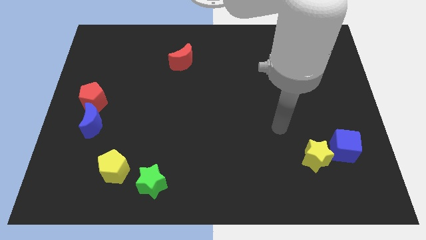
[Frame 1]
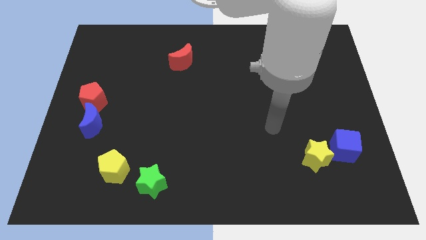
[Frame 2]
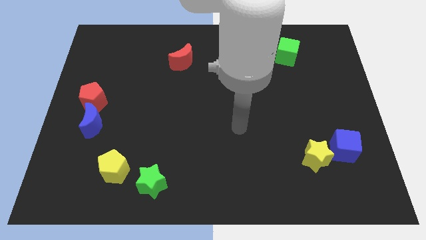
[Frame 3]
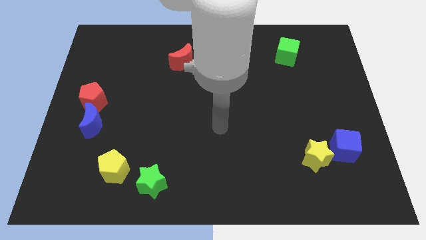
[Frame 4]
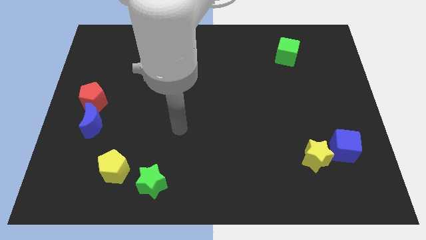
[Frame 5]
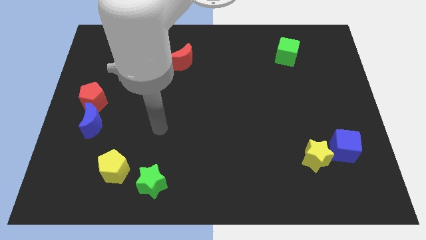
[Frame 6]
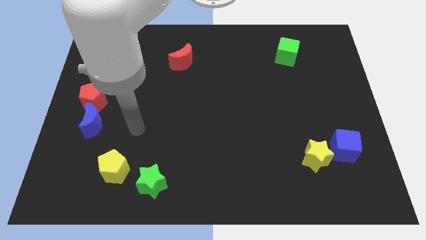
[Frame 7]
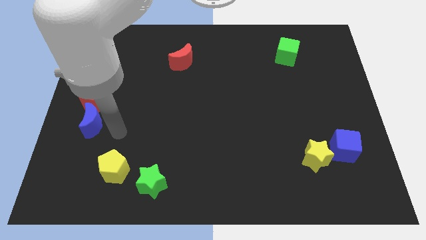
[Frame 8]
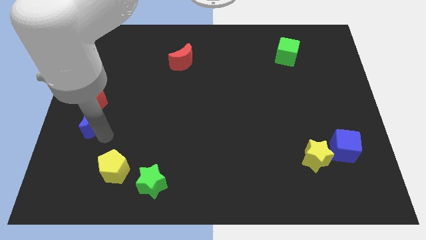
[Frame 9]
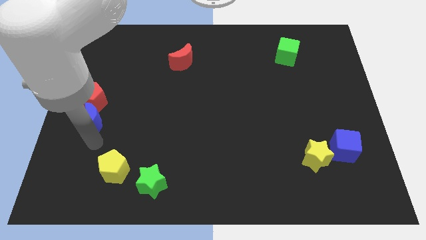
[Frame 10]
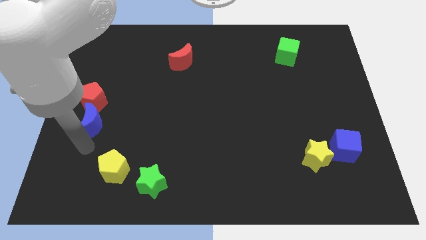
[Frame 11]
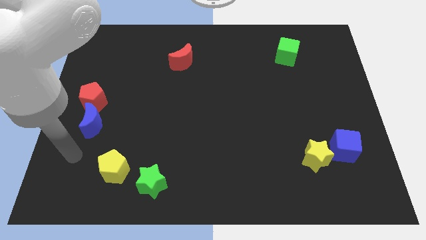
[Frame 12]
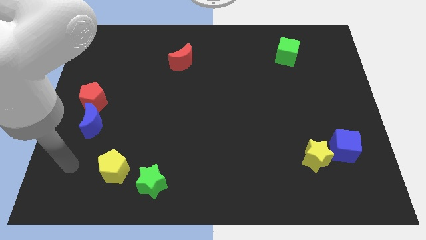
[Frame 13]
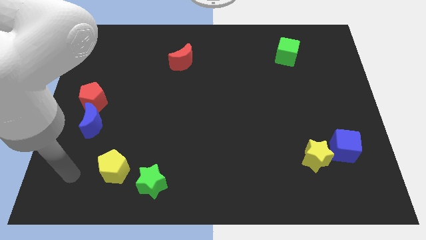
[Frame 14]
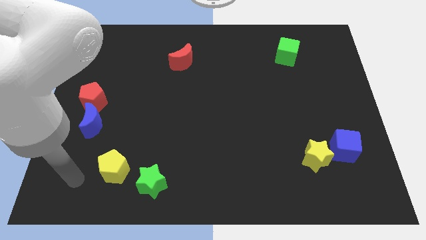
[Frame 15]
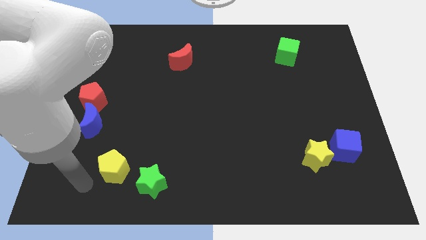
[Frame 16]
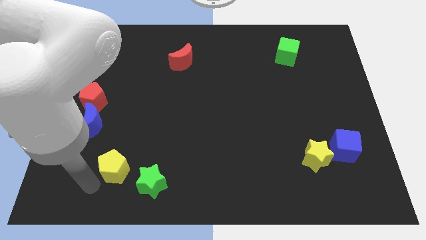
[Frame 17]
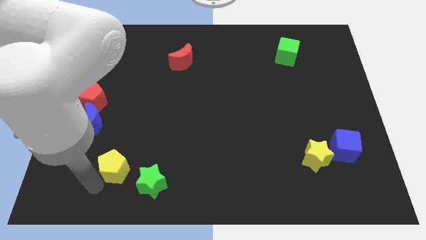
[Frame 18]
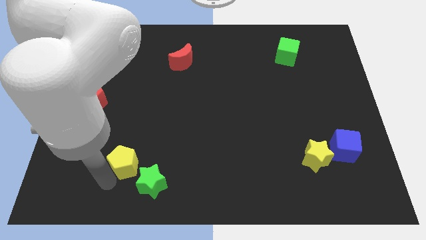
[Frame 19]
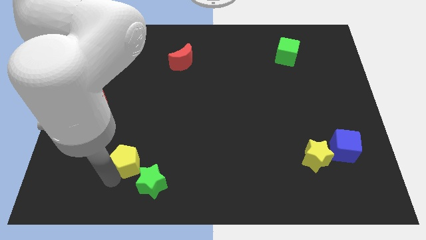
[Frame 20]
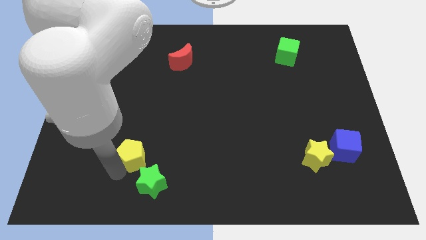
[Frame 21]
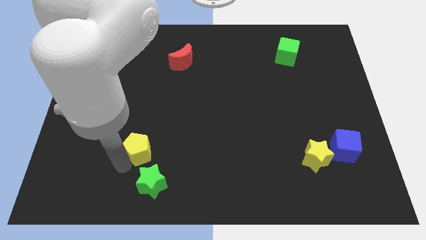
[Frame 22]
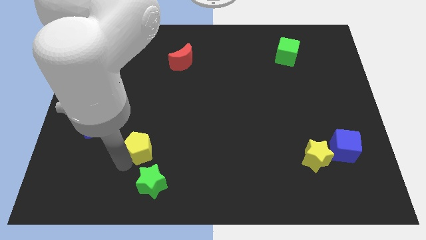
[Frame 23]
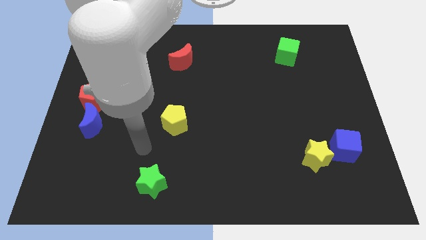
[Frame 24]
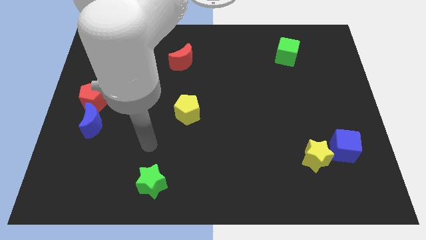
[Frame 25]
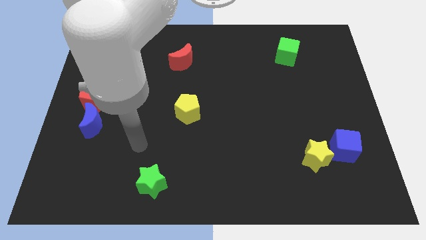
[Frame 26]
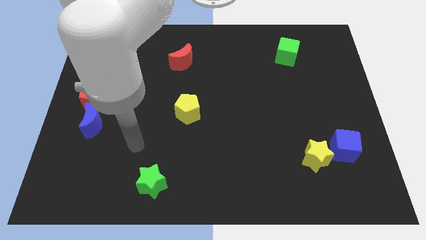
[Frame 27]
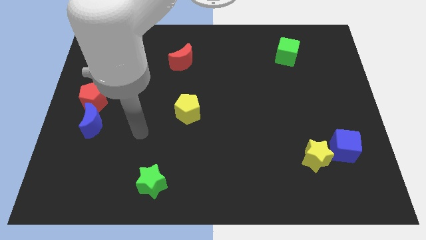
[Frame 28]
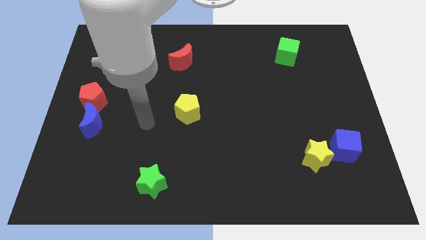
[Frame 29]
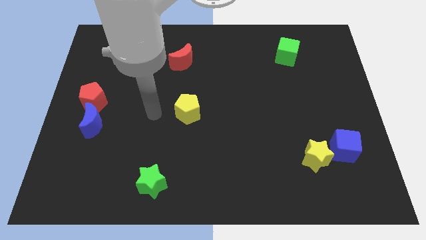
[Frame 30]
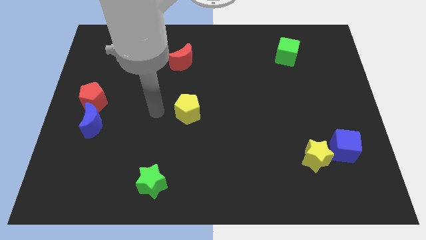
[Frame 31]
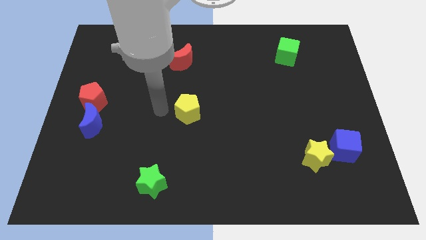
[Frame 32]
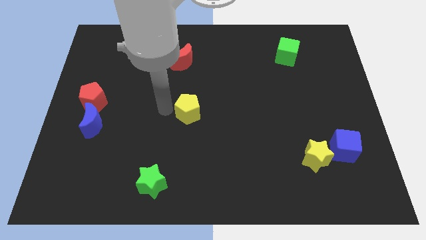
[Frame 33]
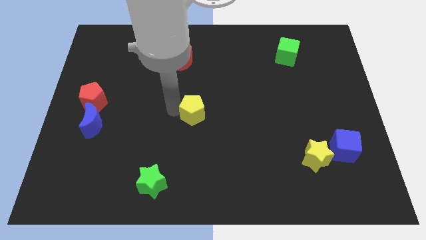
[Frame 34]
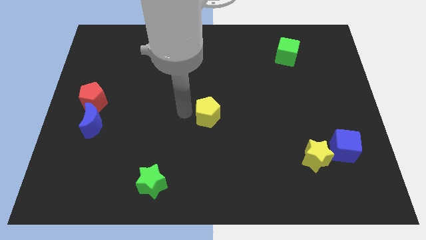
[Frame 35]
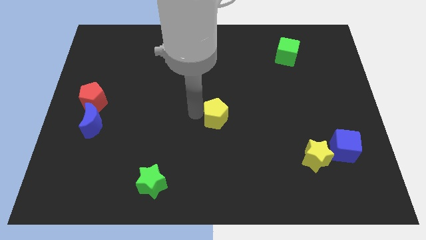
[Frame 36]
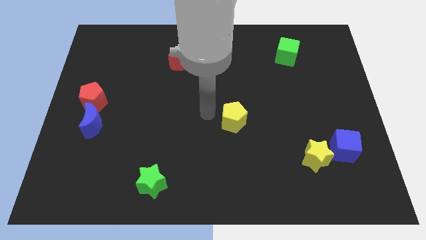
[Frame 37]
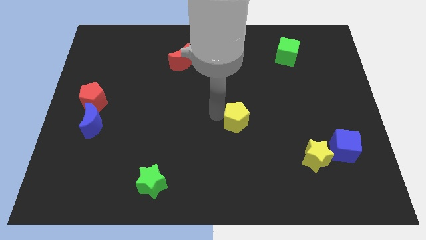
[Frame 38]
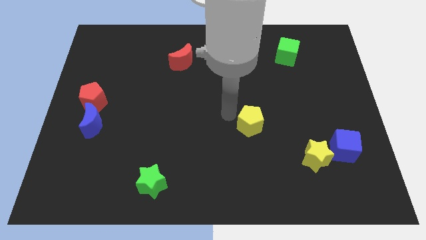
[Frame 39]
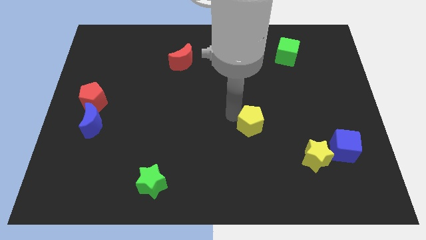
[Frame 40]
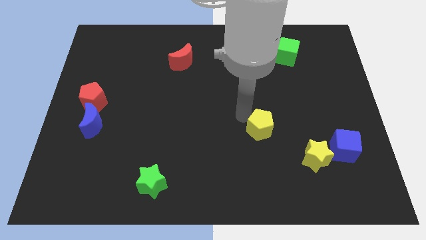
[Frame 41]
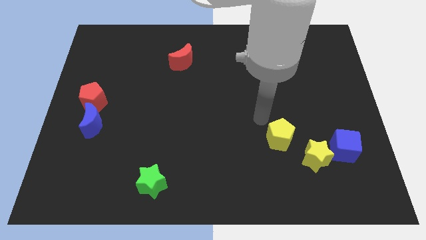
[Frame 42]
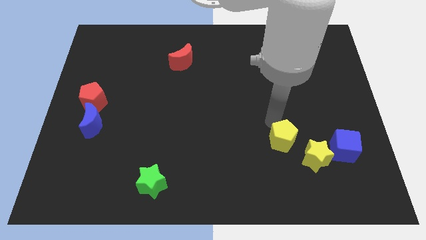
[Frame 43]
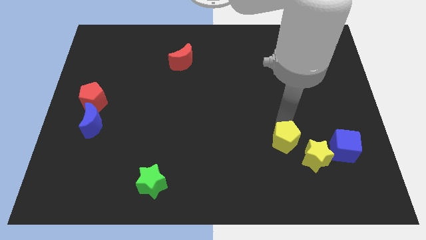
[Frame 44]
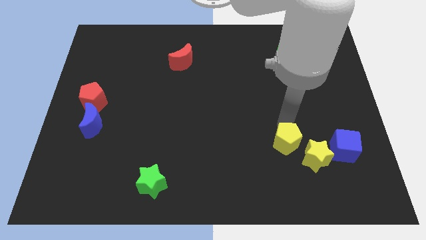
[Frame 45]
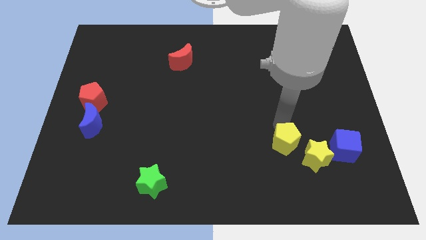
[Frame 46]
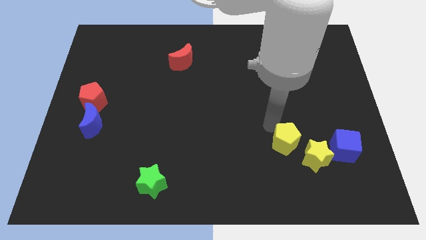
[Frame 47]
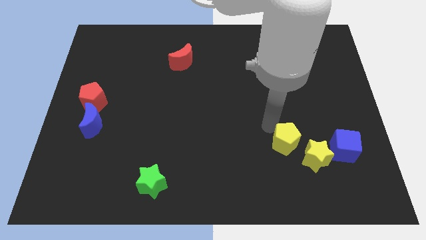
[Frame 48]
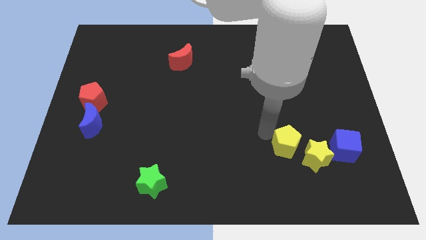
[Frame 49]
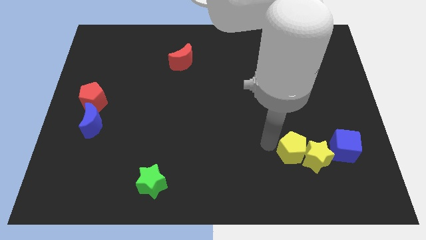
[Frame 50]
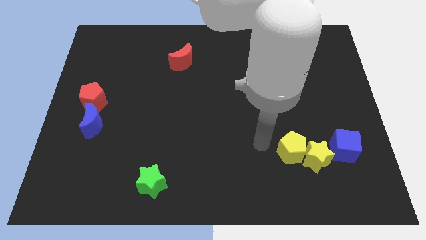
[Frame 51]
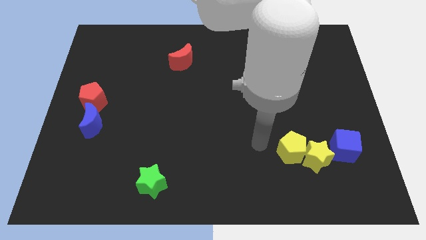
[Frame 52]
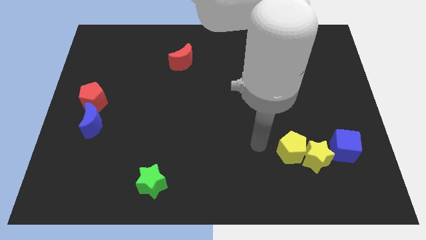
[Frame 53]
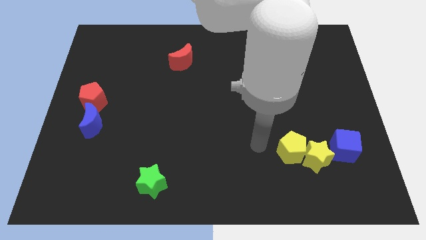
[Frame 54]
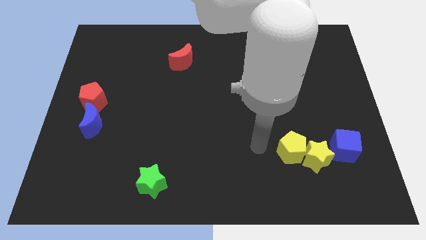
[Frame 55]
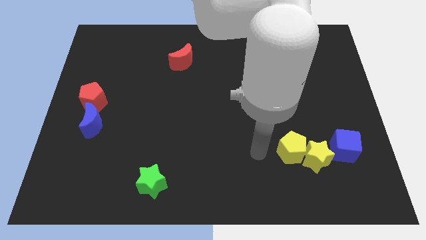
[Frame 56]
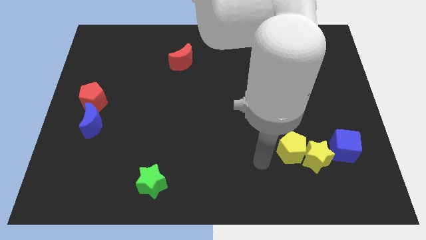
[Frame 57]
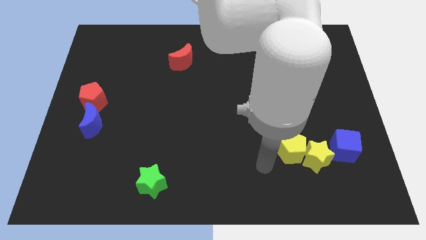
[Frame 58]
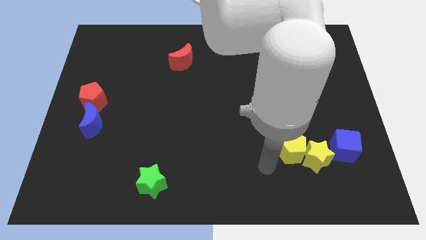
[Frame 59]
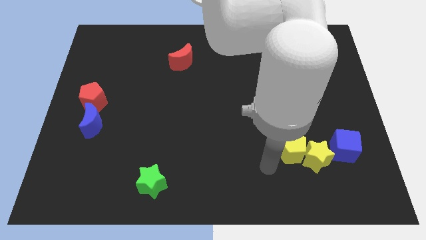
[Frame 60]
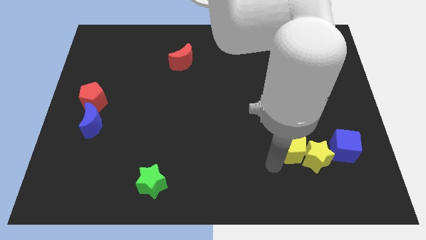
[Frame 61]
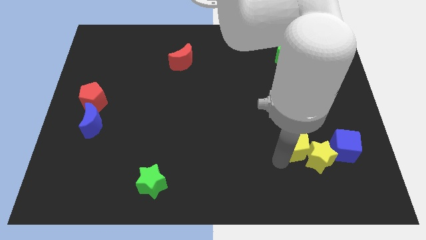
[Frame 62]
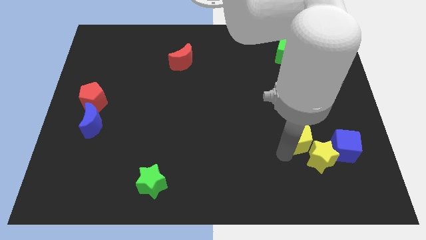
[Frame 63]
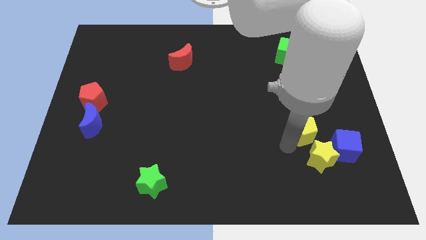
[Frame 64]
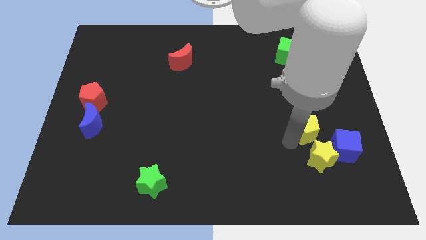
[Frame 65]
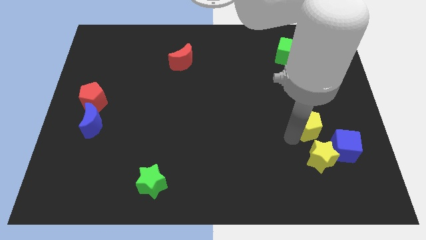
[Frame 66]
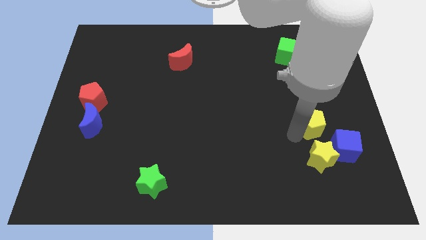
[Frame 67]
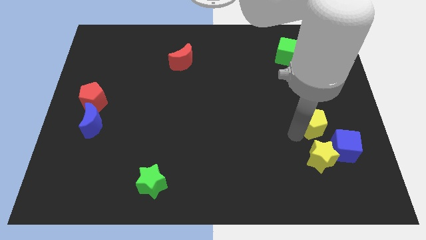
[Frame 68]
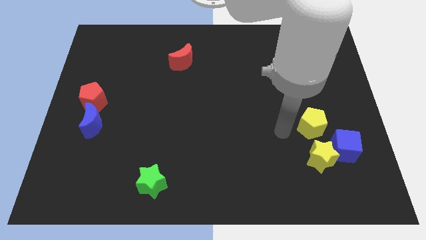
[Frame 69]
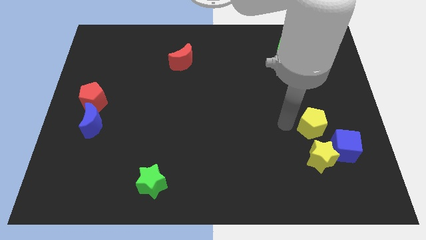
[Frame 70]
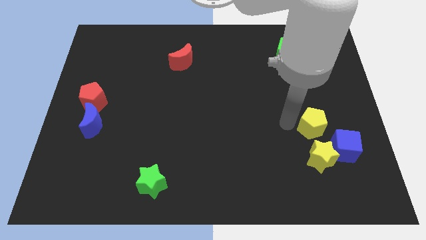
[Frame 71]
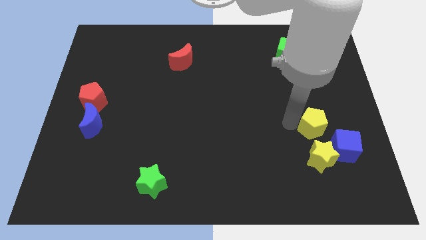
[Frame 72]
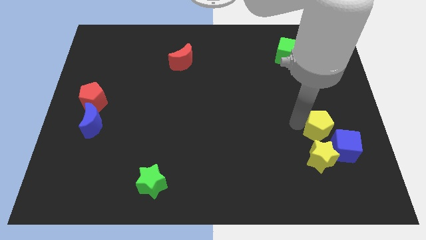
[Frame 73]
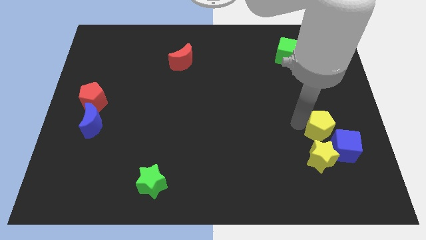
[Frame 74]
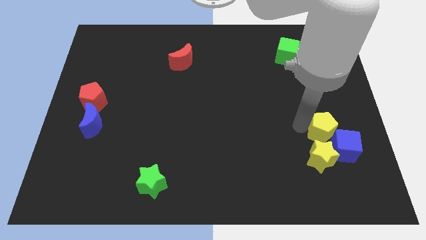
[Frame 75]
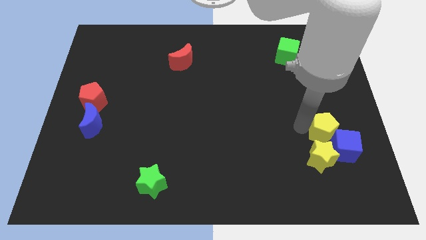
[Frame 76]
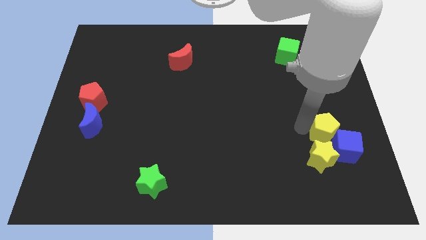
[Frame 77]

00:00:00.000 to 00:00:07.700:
push the yellow pentagon next to the blue cube

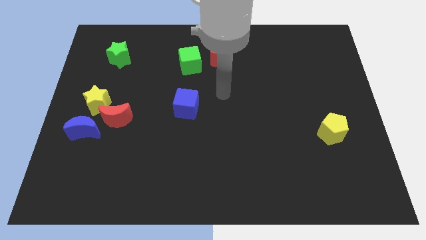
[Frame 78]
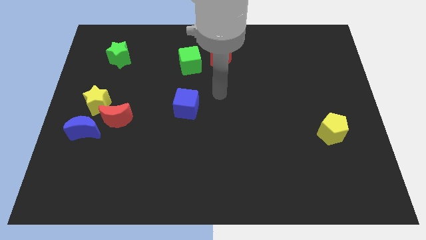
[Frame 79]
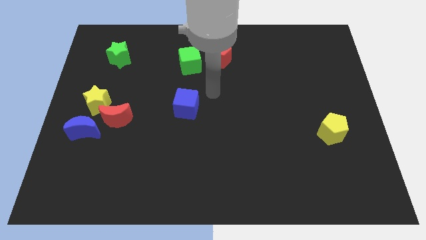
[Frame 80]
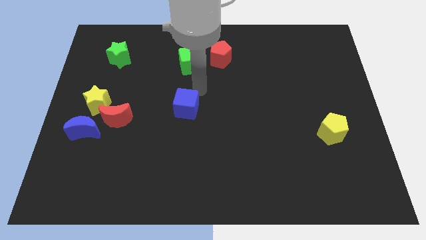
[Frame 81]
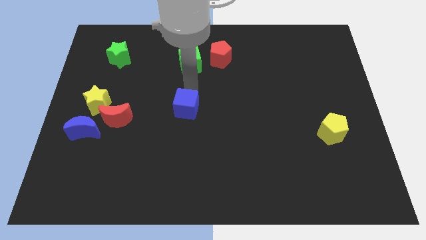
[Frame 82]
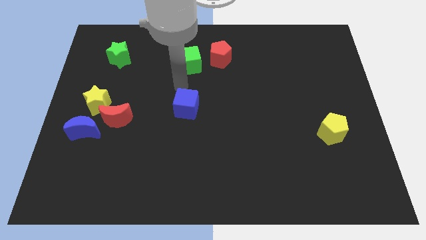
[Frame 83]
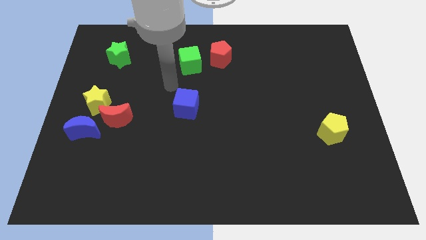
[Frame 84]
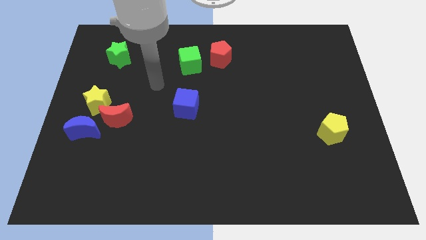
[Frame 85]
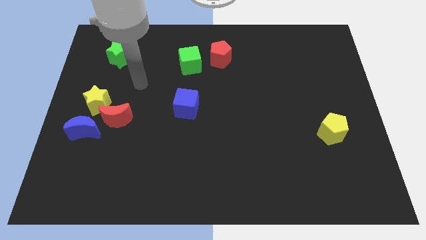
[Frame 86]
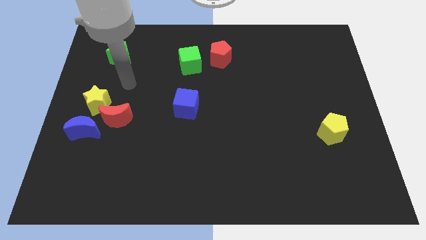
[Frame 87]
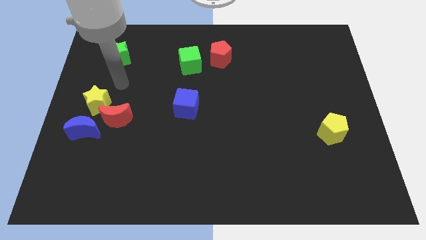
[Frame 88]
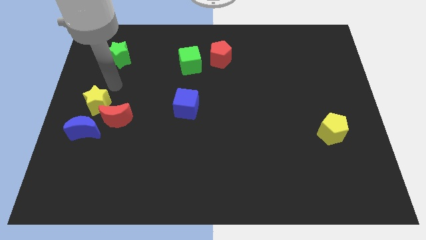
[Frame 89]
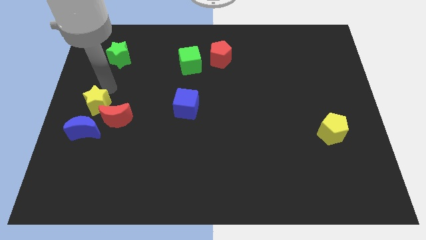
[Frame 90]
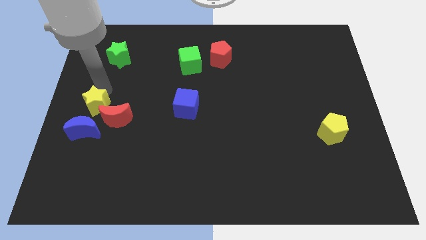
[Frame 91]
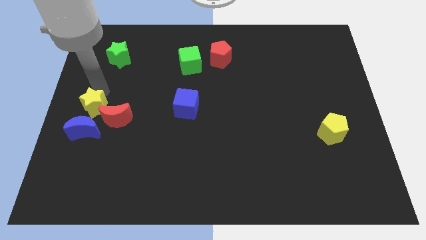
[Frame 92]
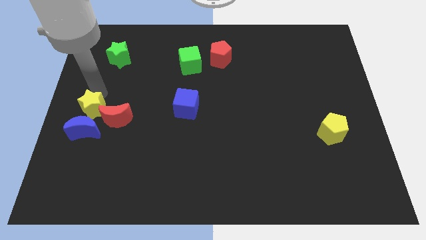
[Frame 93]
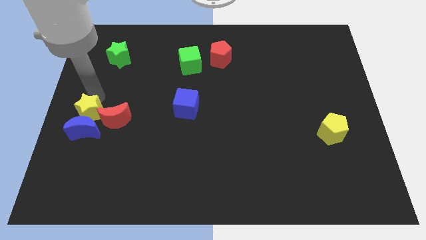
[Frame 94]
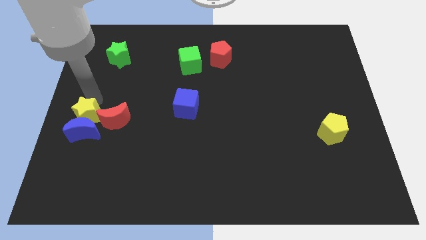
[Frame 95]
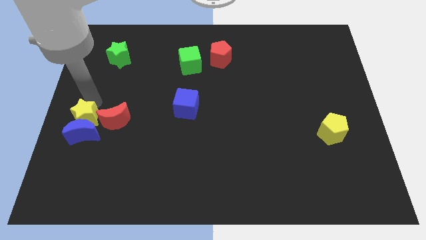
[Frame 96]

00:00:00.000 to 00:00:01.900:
push the yellow star next to the blue moon
